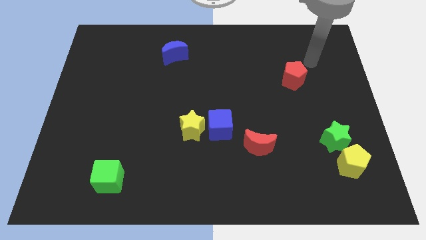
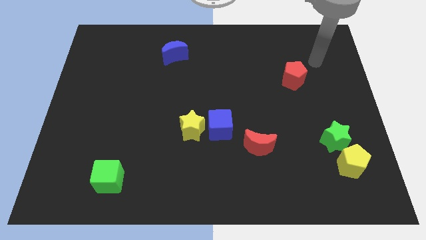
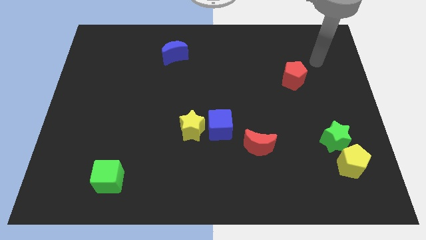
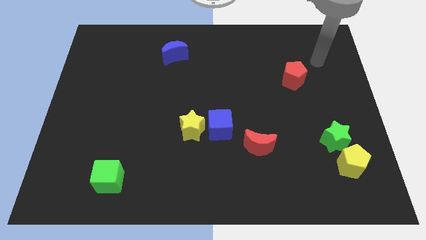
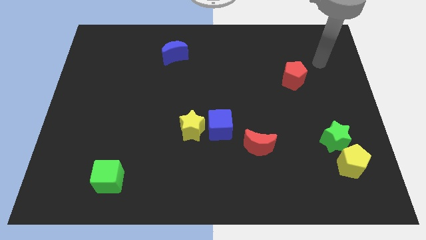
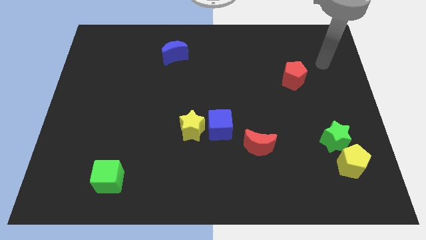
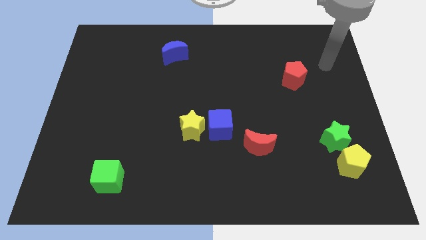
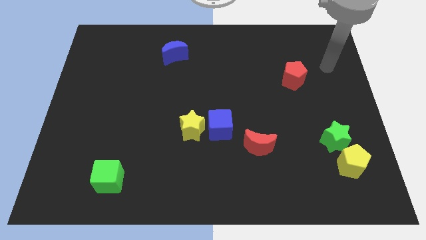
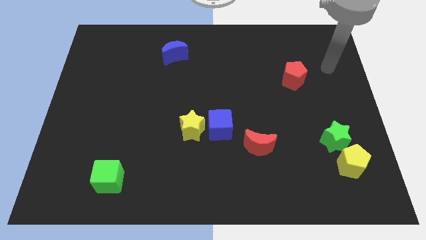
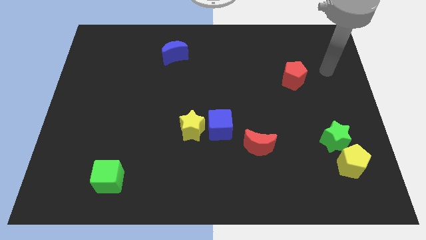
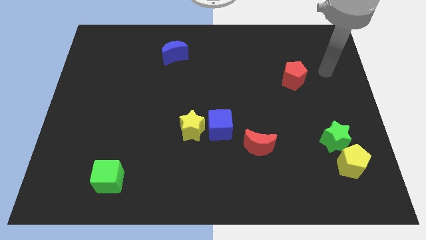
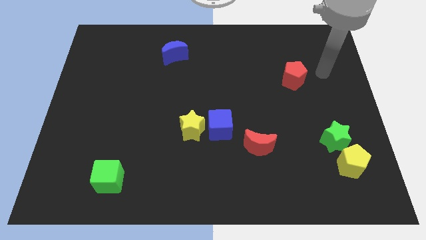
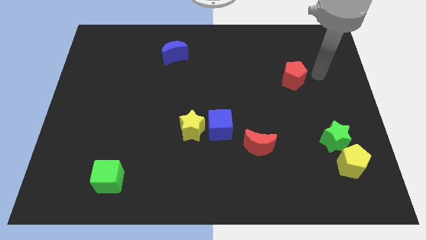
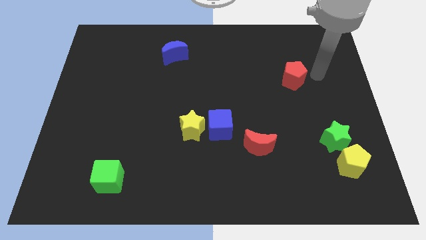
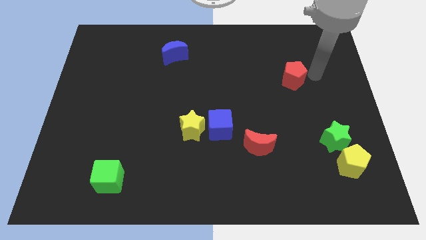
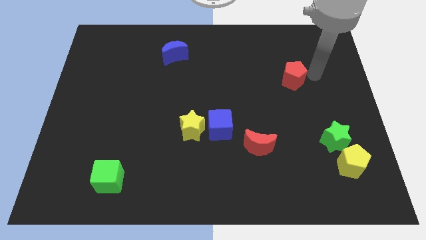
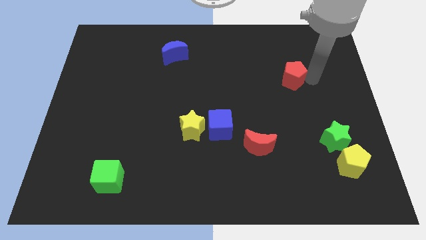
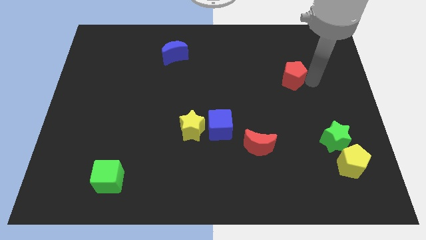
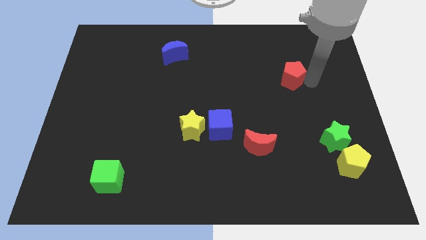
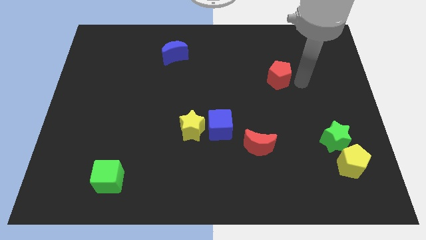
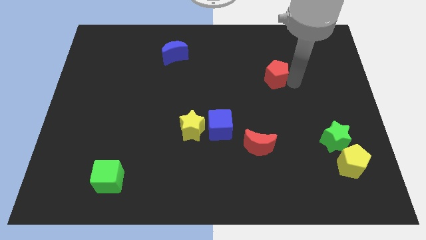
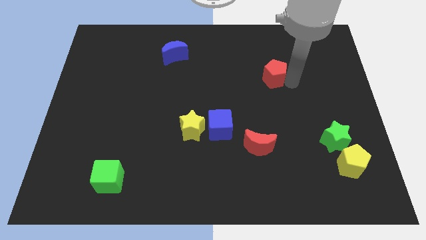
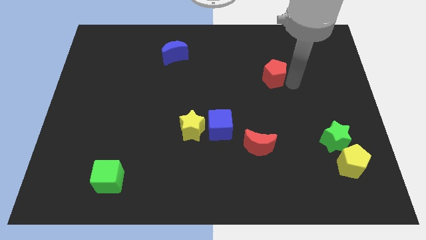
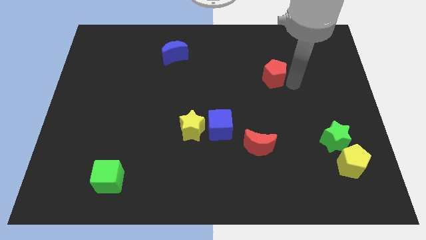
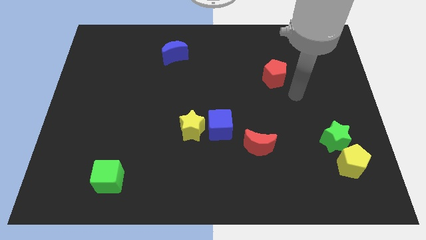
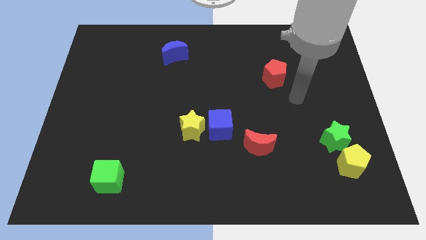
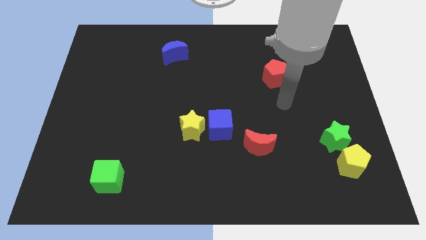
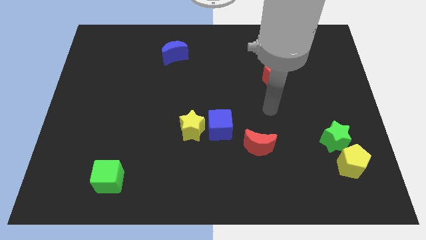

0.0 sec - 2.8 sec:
move red pentagon slightly to the left

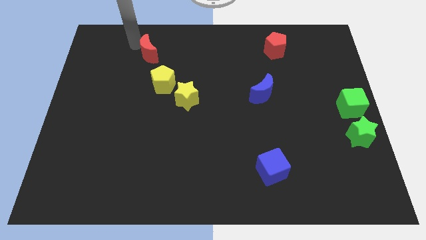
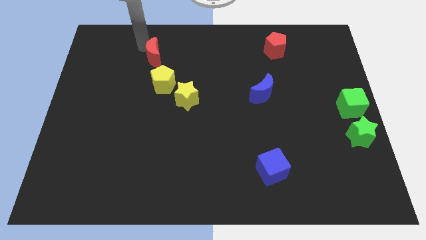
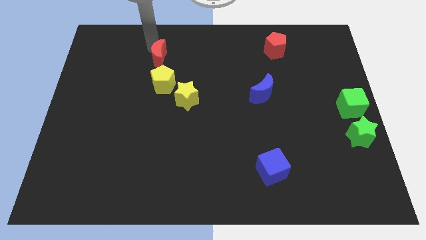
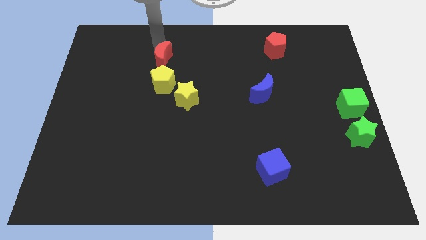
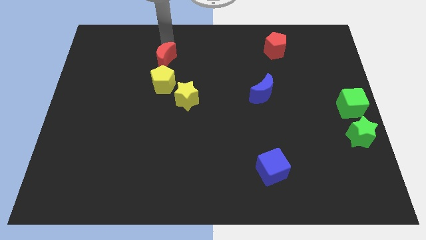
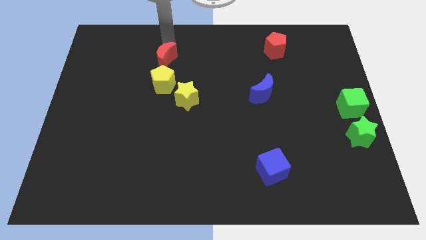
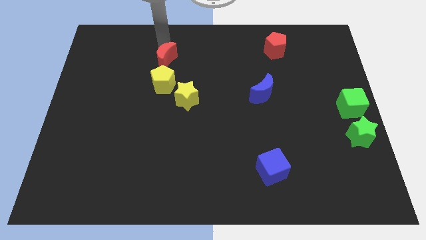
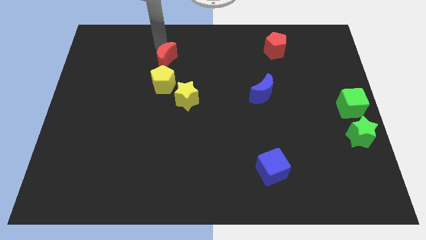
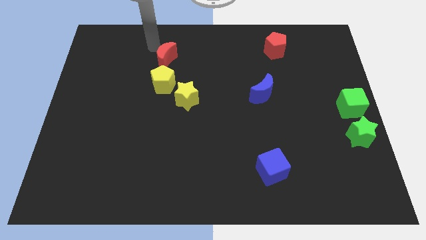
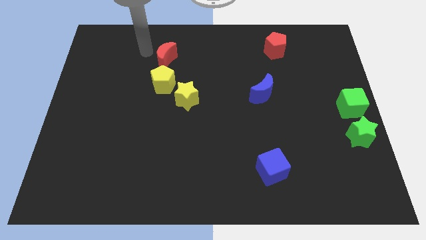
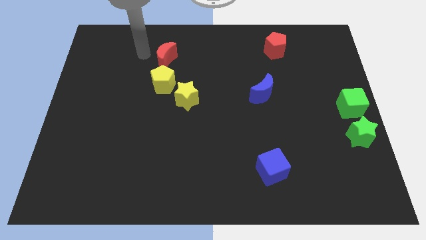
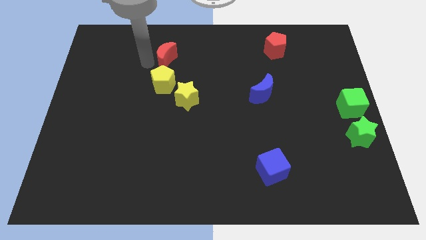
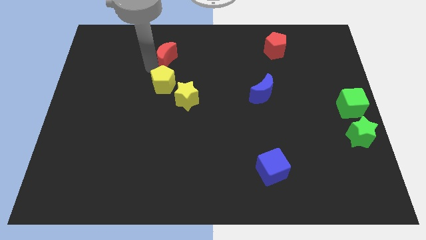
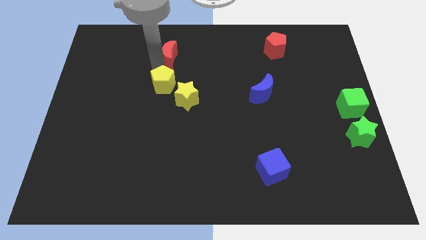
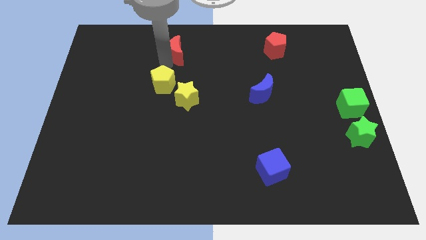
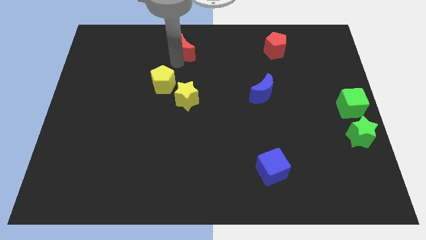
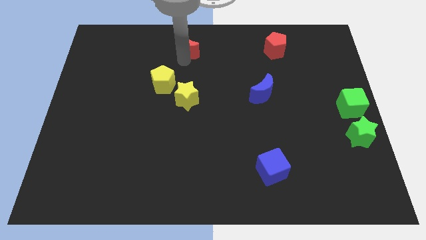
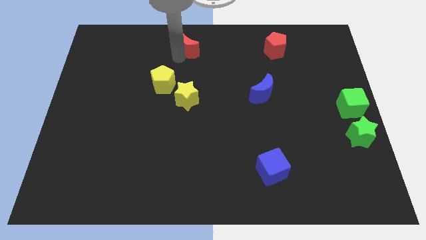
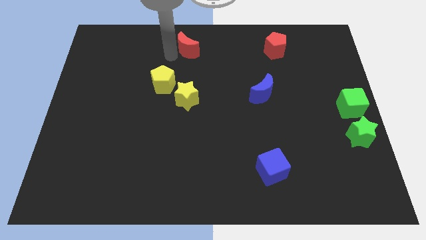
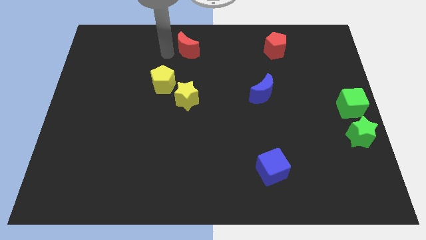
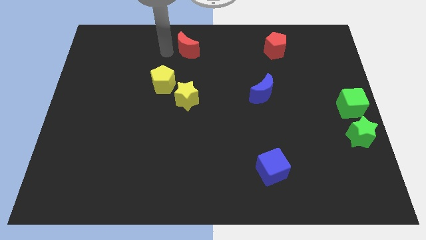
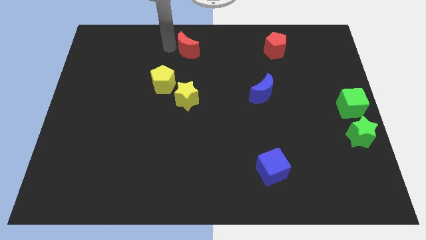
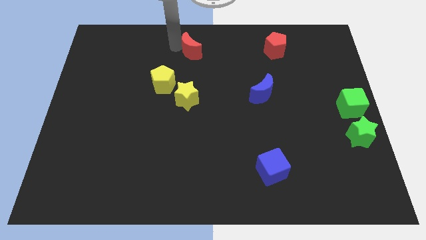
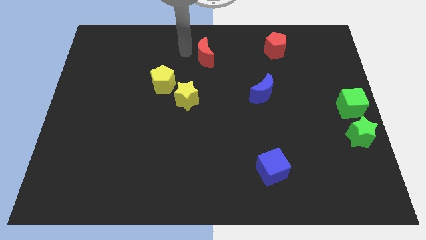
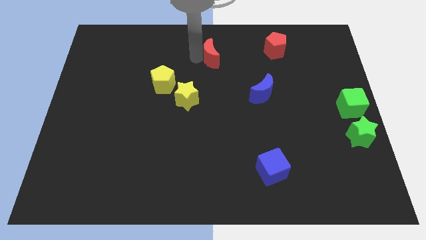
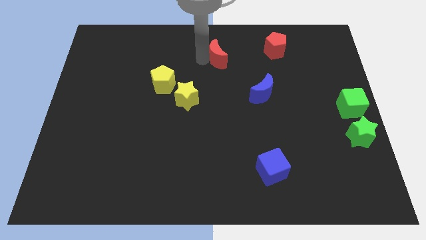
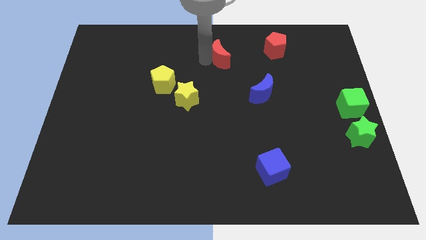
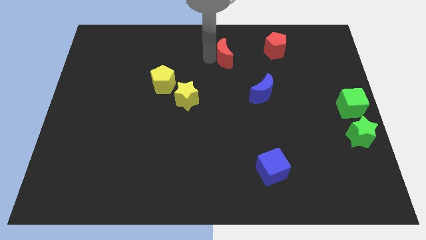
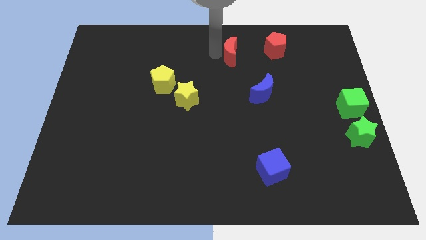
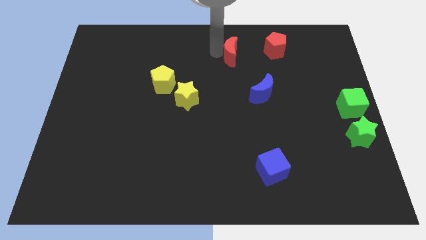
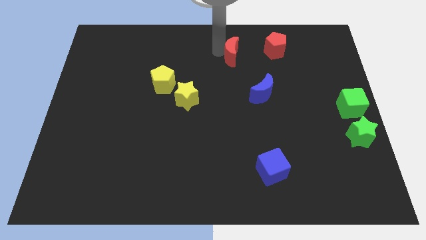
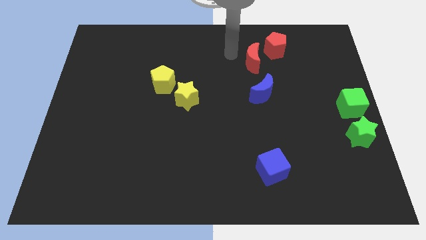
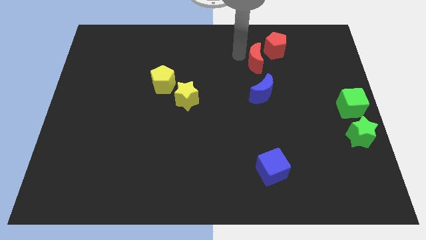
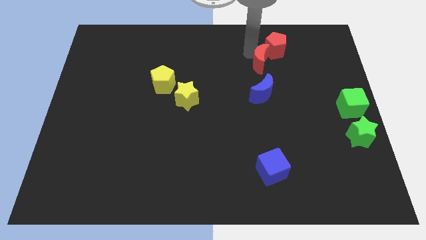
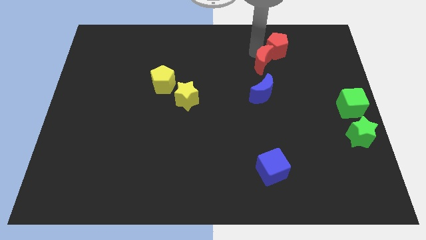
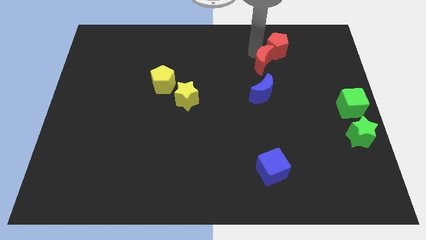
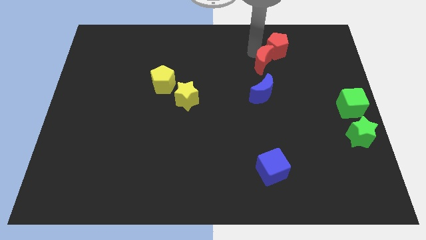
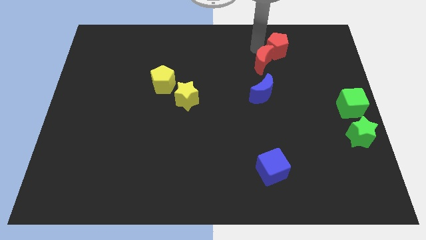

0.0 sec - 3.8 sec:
push red moon diagonally below red pentagon

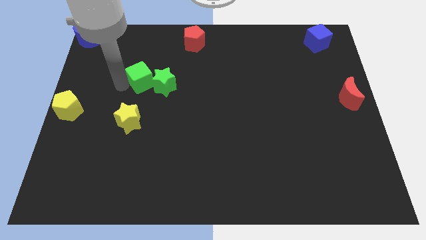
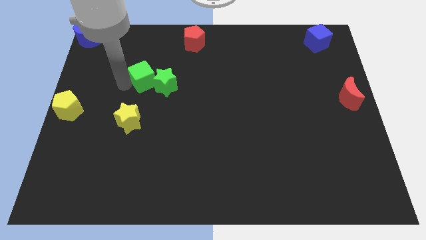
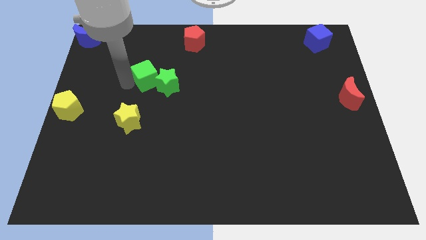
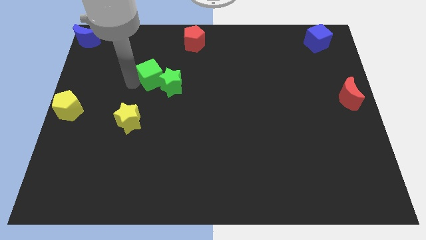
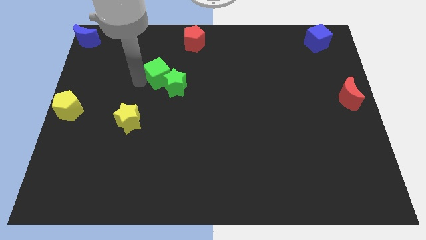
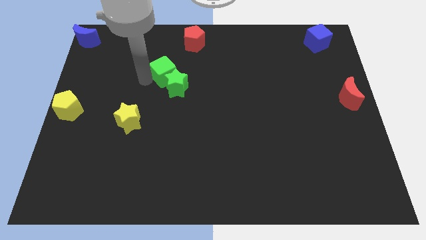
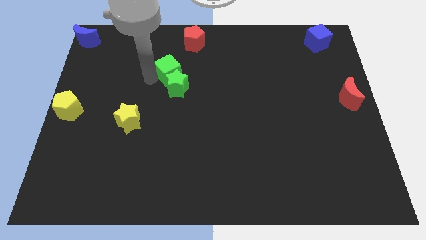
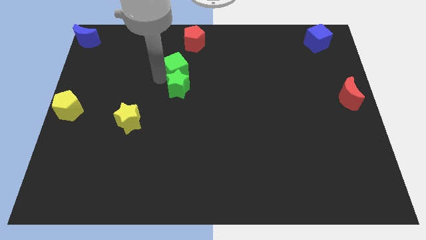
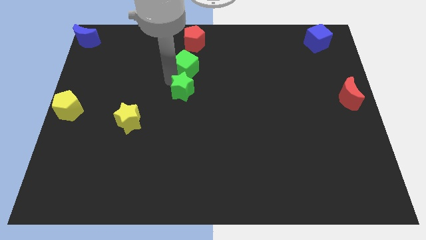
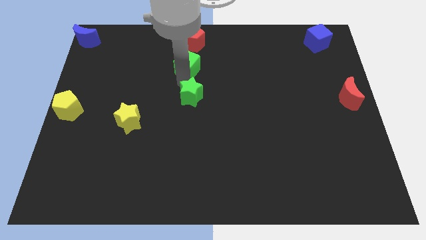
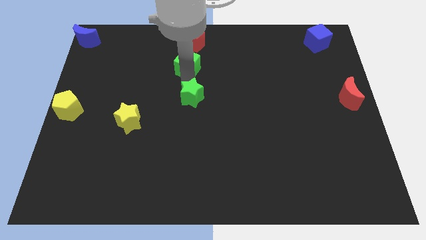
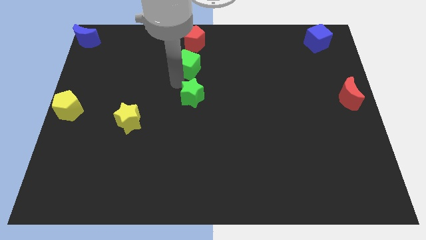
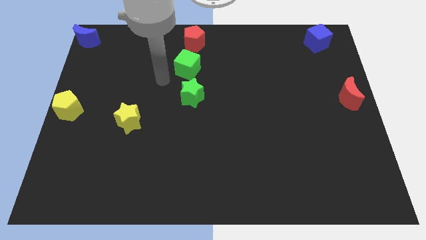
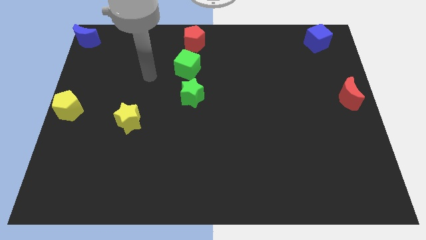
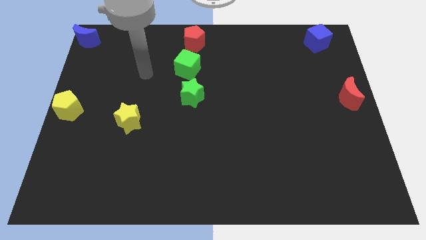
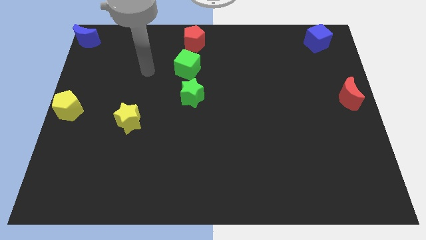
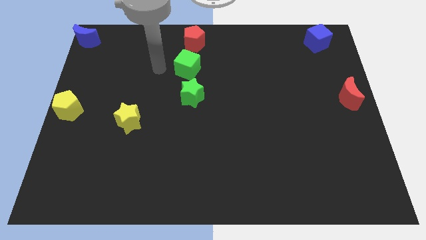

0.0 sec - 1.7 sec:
move the green cube to the bottom side of the red pentagon

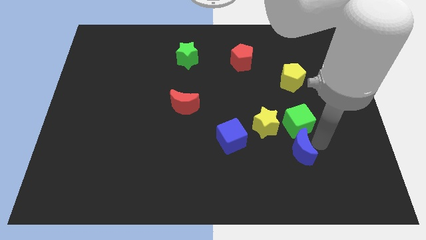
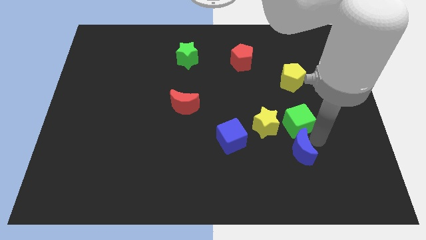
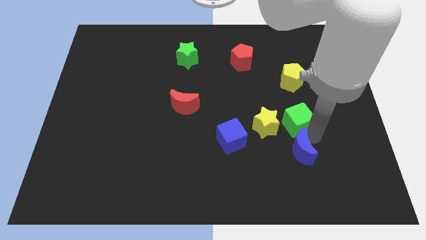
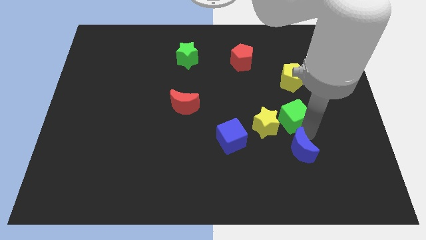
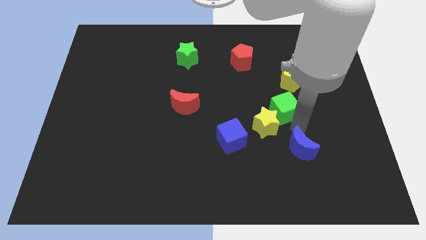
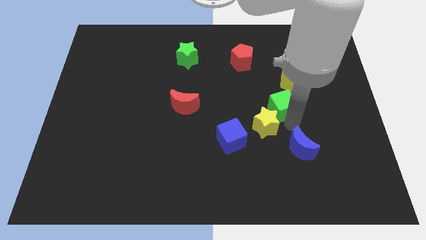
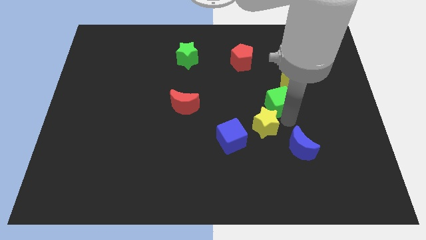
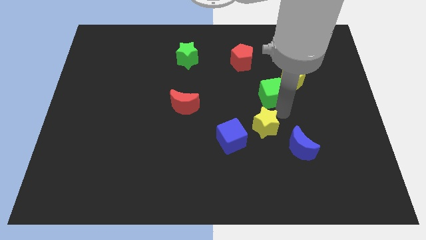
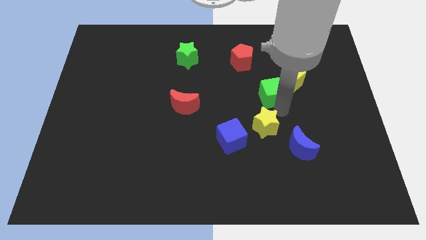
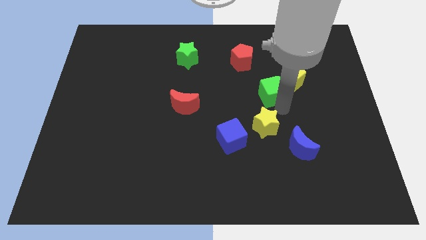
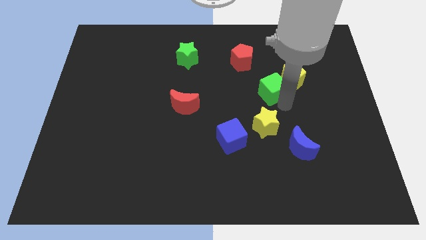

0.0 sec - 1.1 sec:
move the green cube away from the blue crescent
